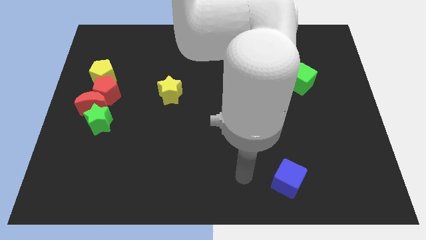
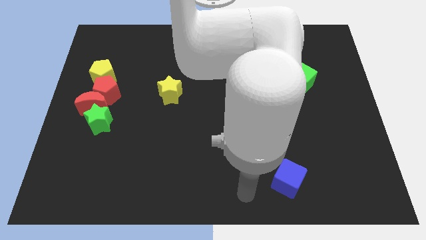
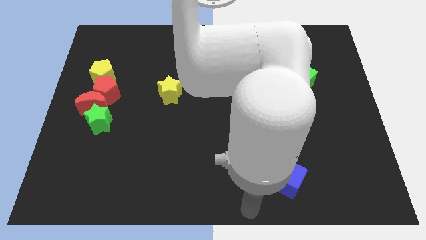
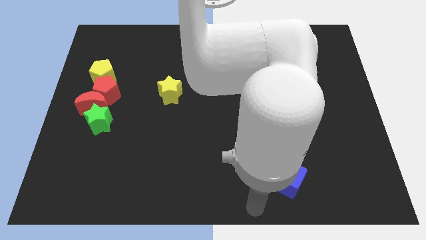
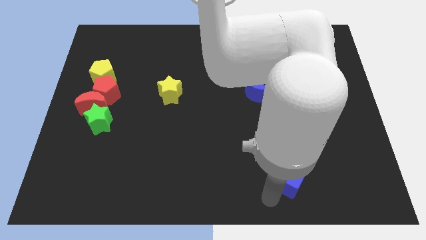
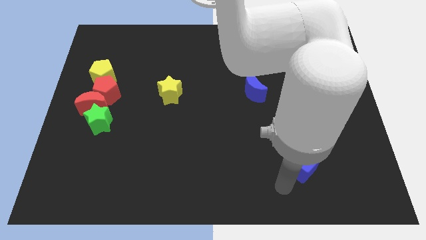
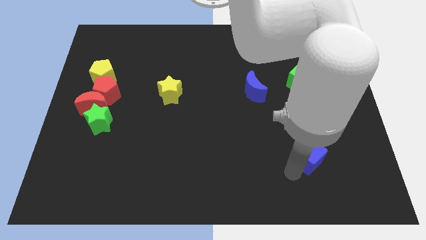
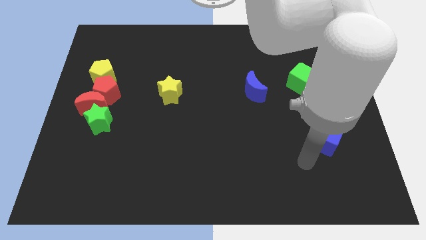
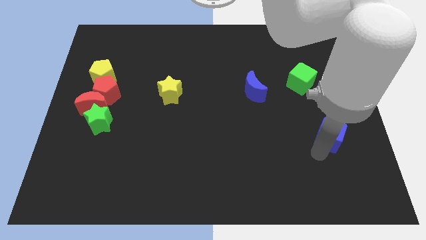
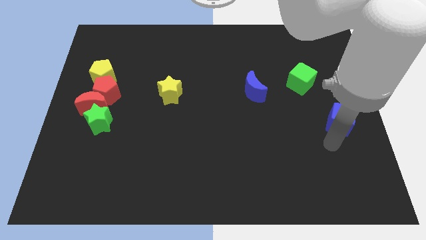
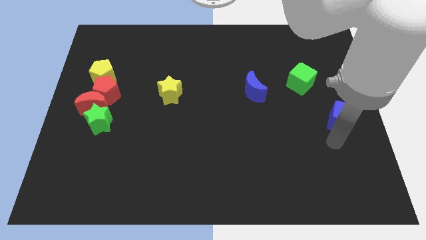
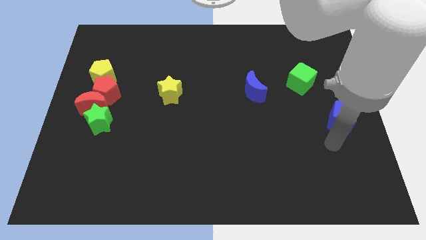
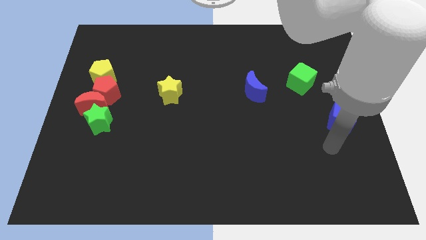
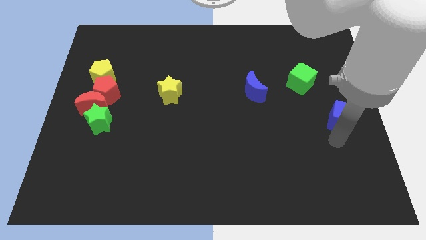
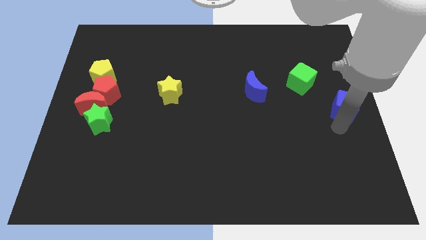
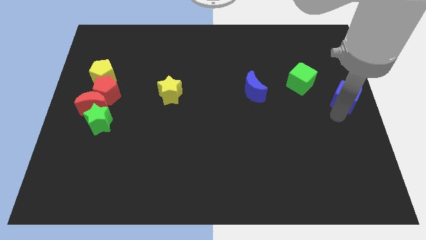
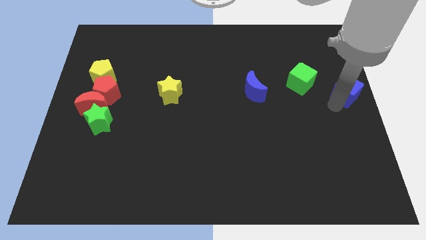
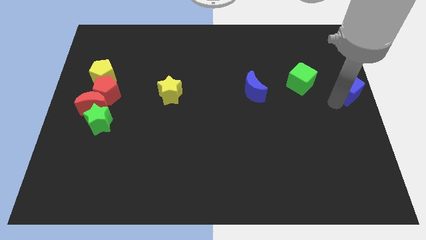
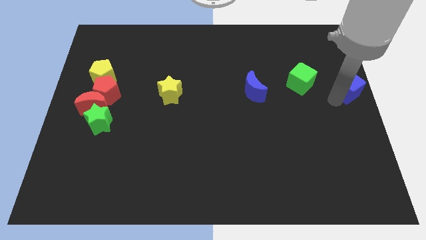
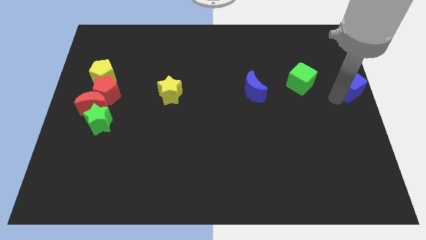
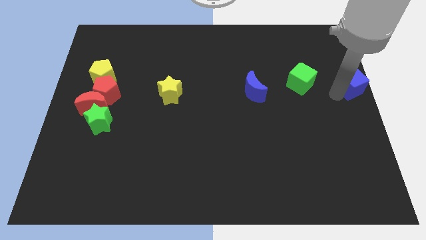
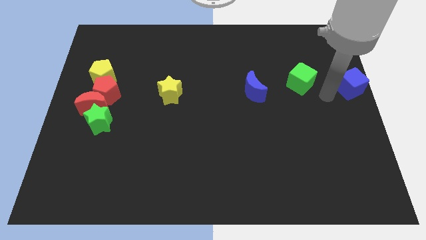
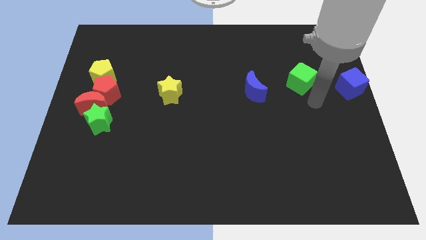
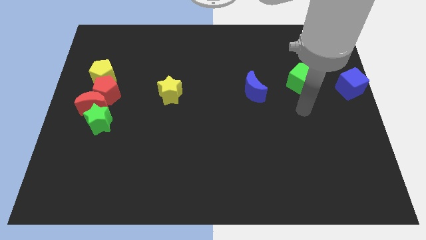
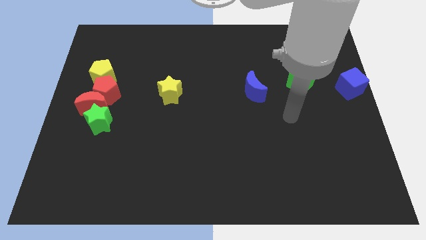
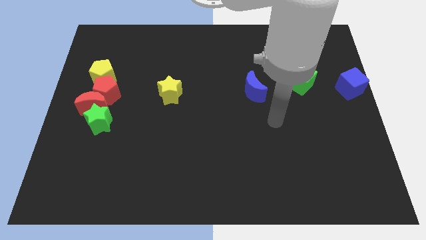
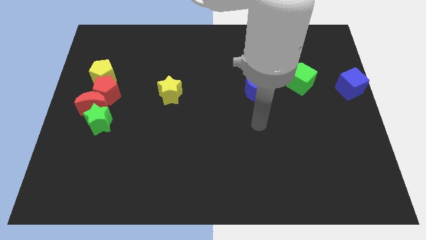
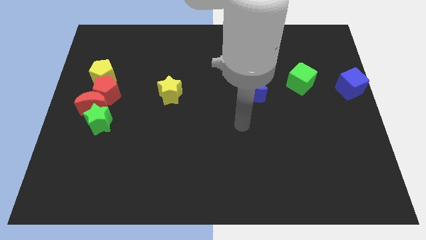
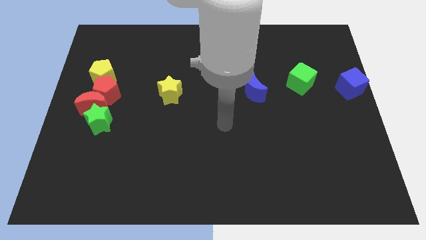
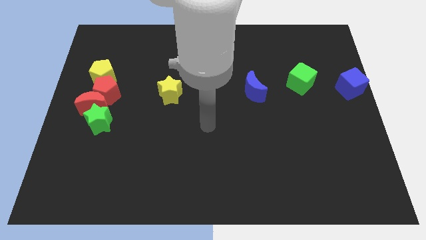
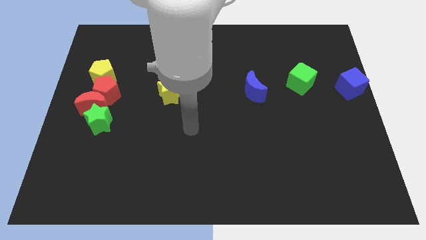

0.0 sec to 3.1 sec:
place the blue cube right beside the green cube

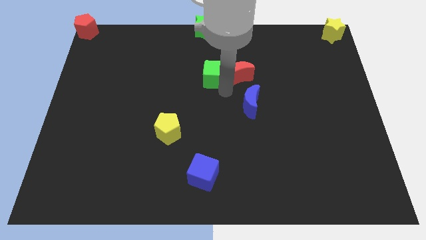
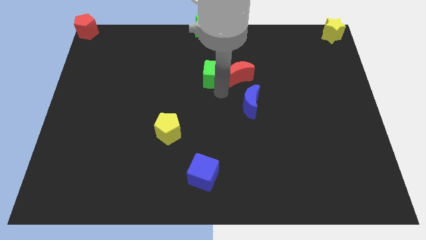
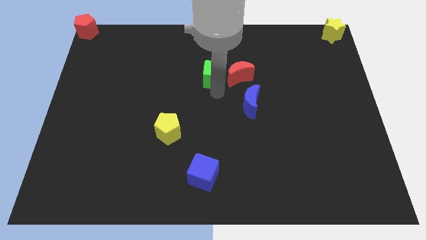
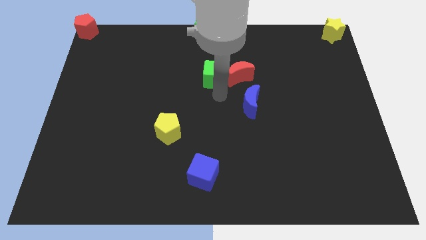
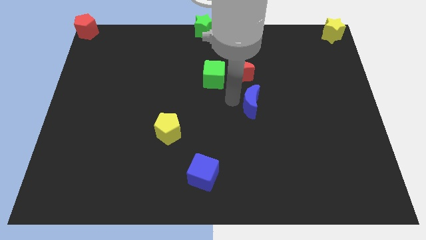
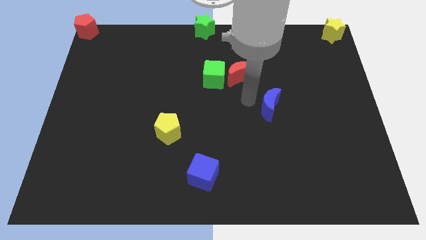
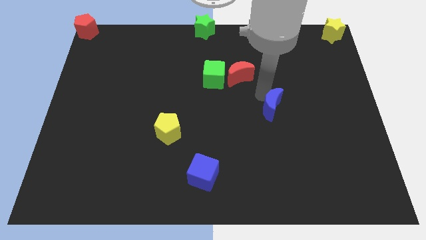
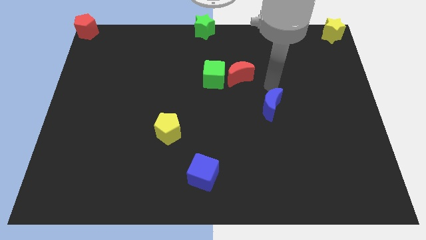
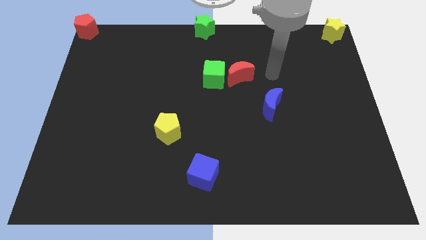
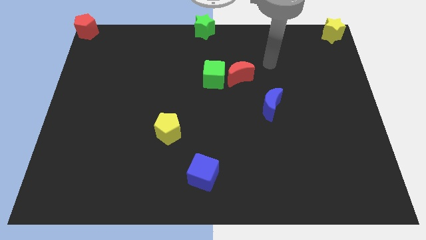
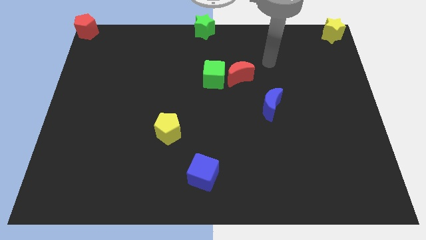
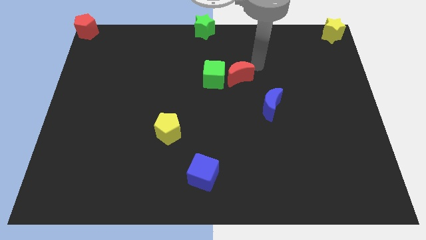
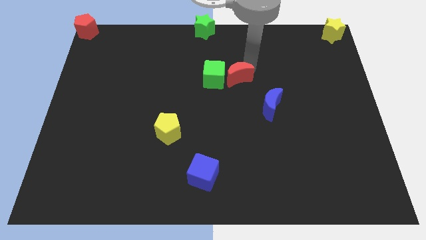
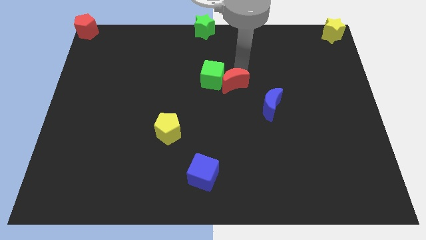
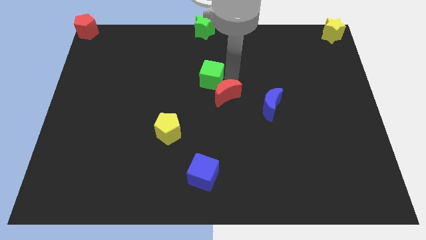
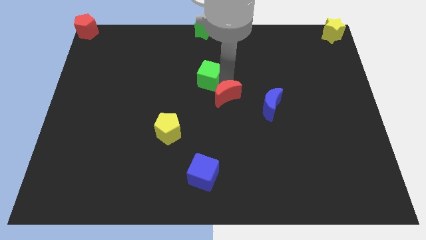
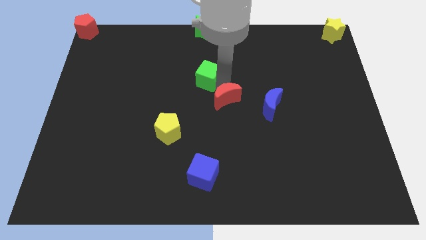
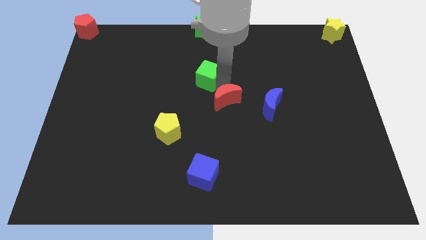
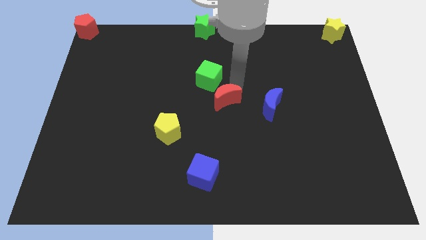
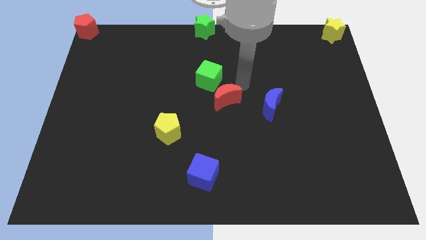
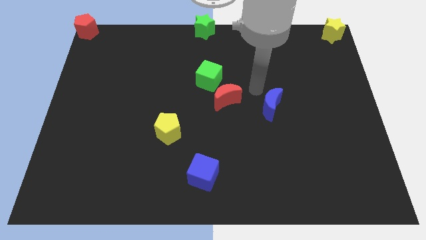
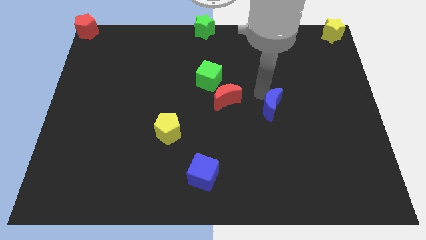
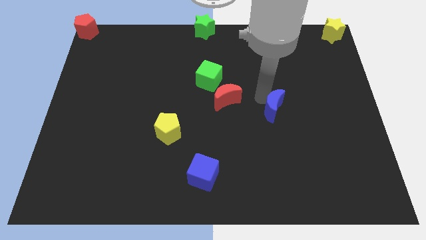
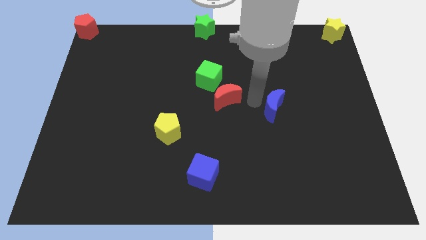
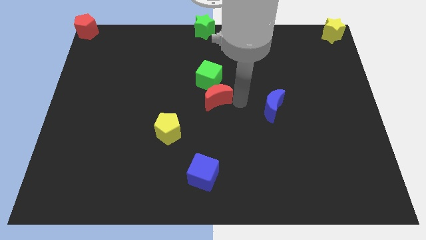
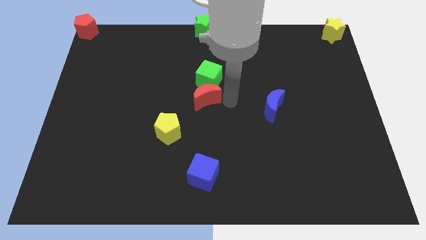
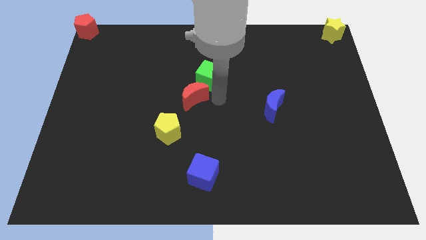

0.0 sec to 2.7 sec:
push red crescent below green cube

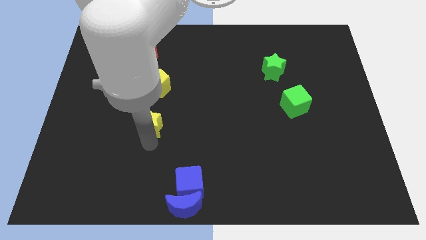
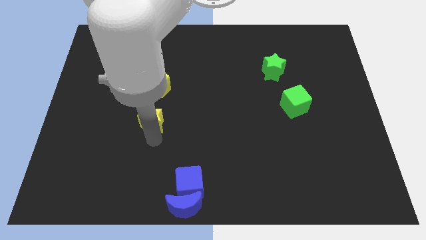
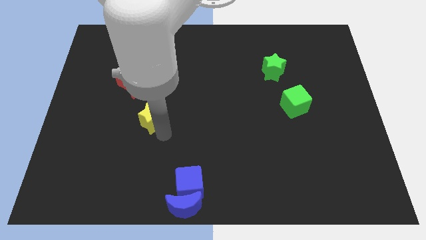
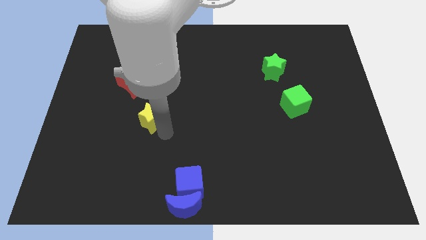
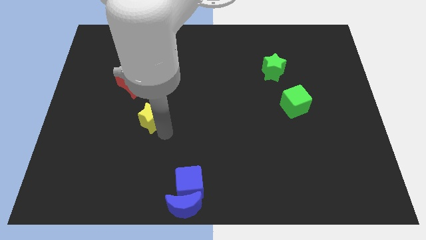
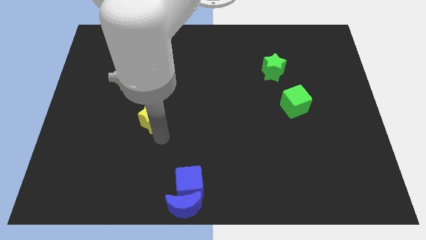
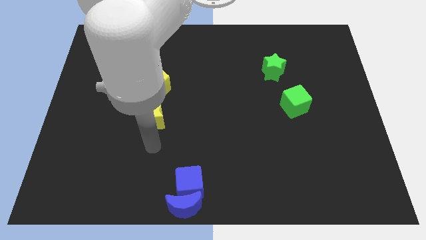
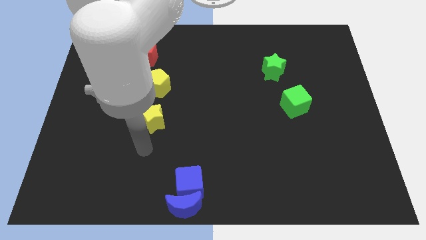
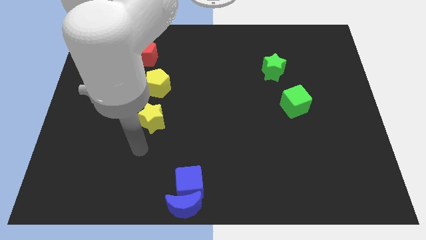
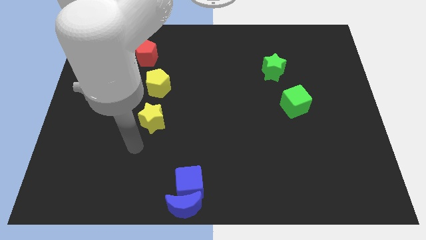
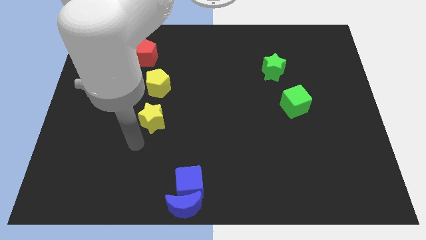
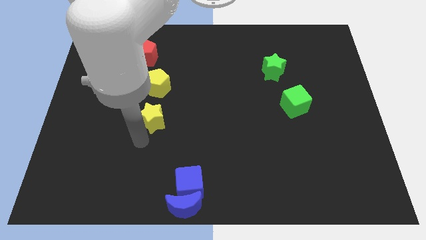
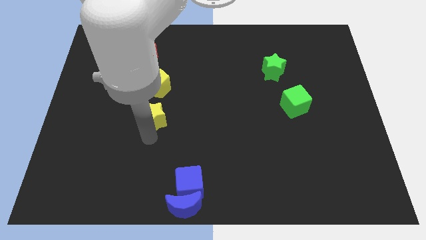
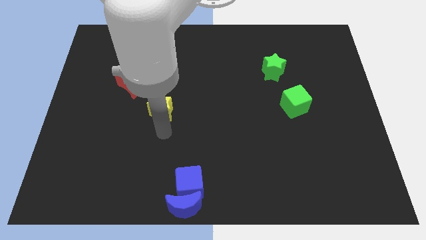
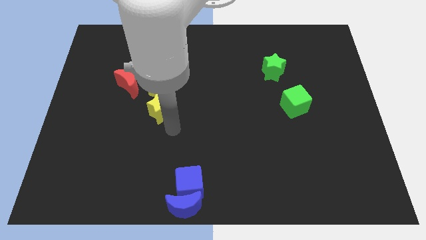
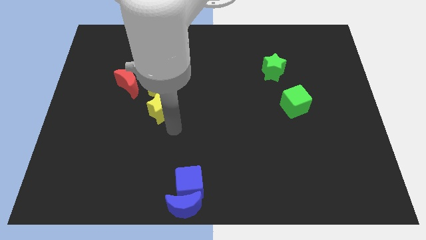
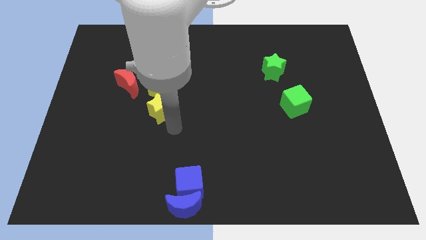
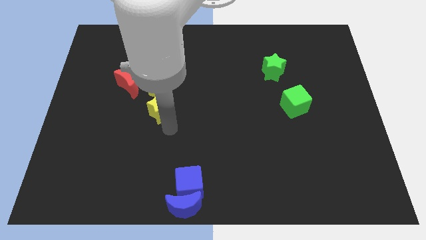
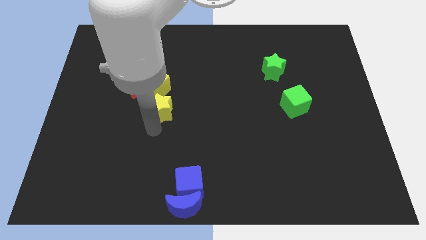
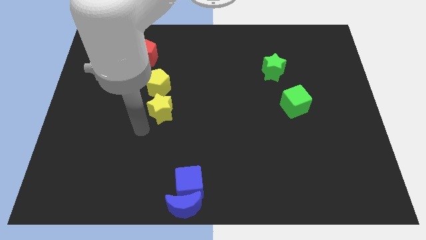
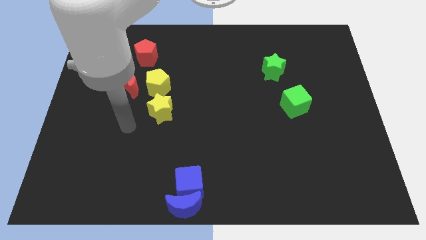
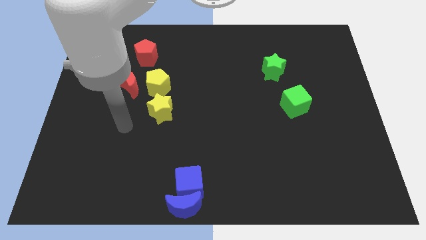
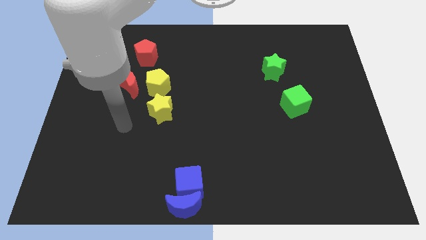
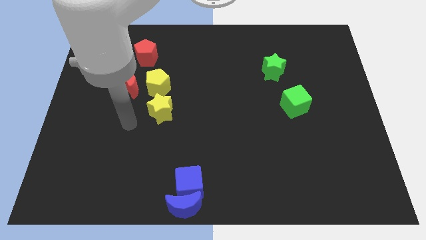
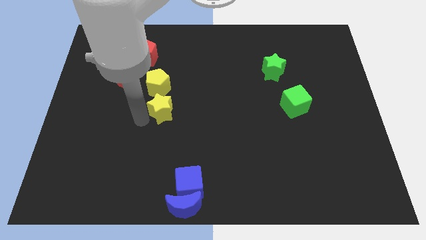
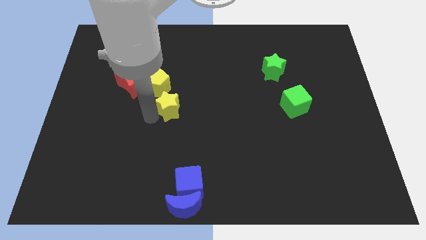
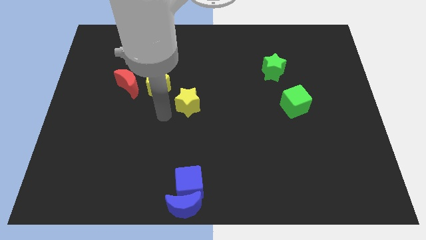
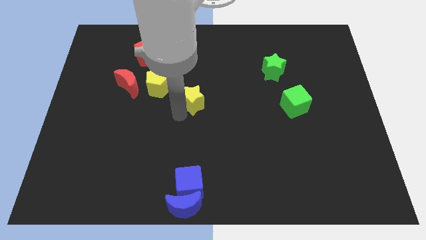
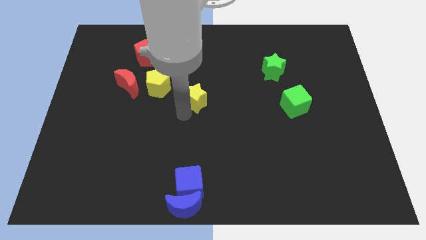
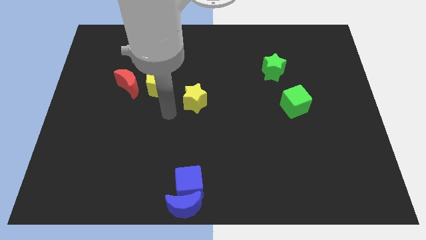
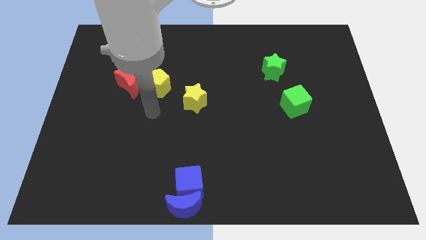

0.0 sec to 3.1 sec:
push the yellow star to the bottom right of the yellow pentagon

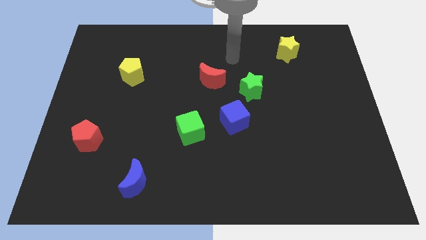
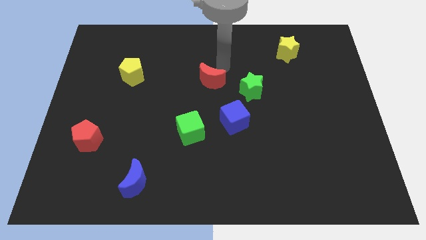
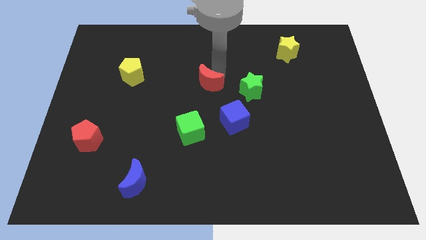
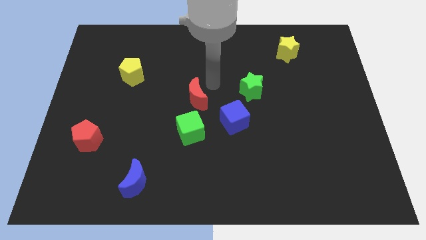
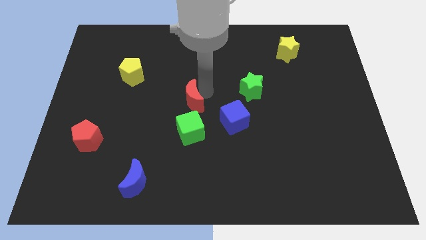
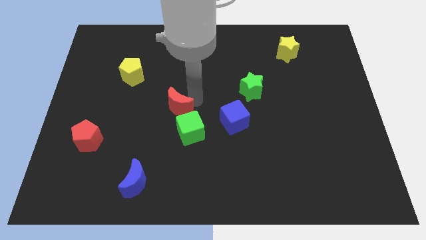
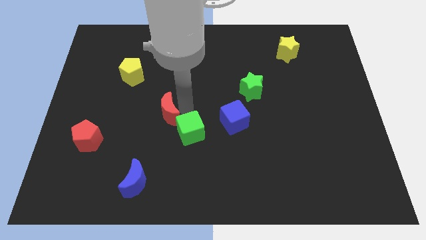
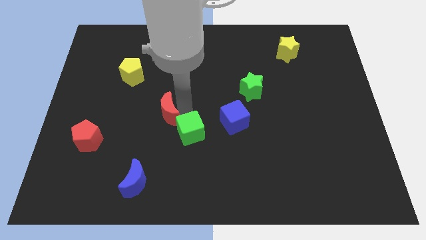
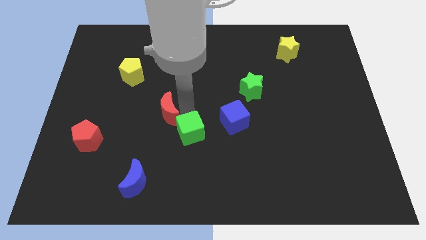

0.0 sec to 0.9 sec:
push the red crescent to the left of the green cube
